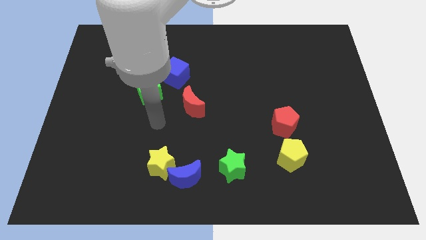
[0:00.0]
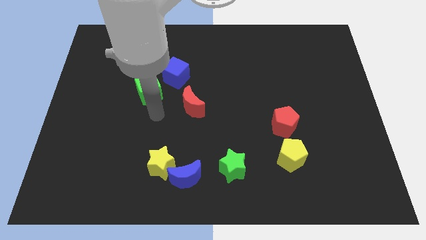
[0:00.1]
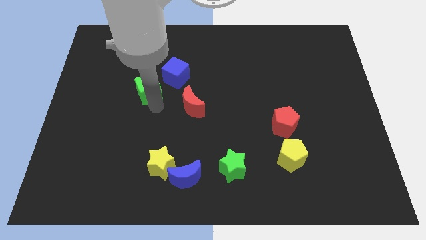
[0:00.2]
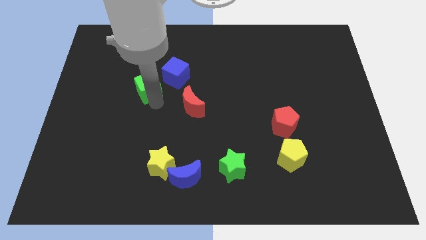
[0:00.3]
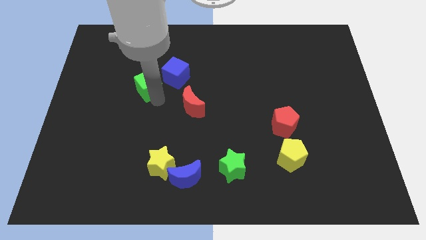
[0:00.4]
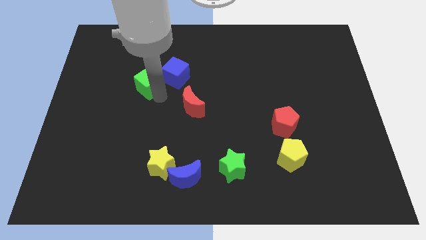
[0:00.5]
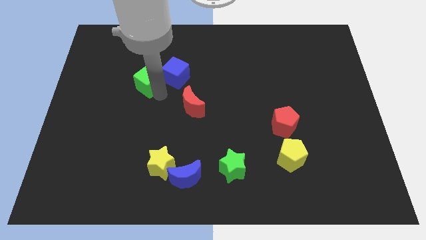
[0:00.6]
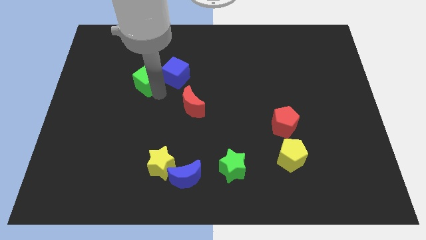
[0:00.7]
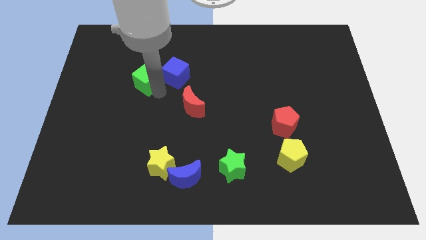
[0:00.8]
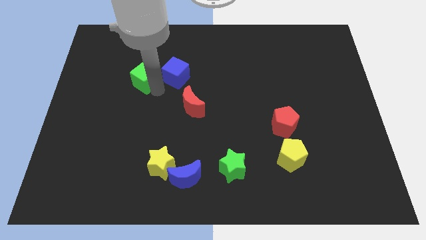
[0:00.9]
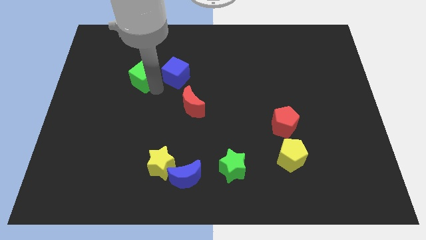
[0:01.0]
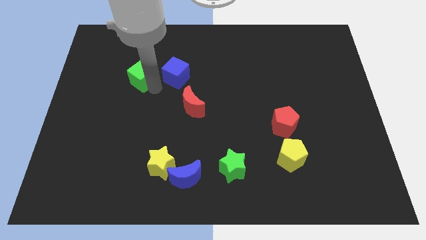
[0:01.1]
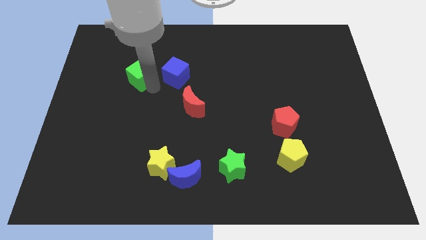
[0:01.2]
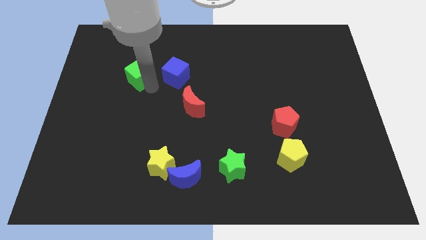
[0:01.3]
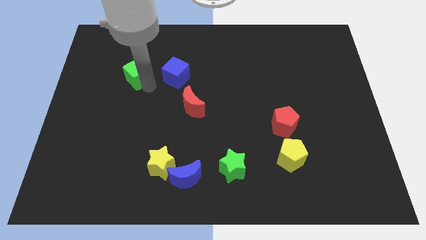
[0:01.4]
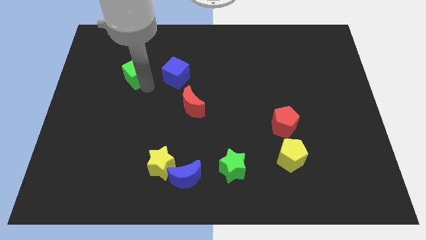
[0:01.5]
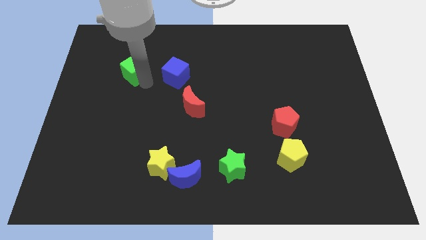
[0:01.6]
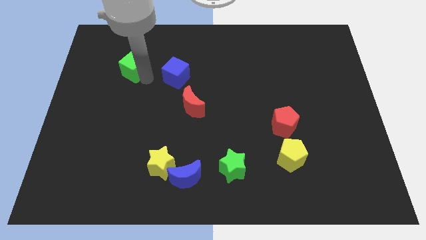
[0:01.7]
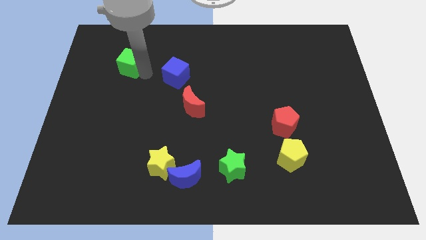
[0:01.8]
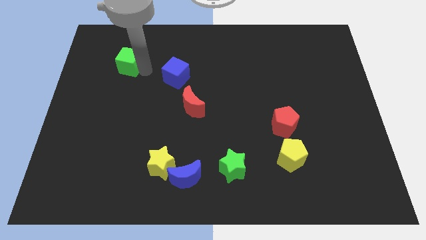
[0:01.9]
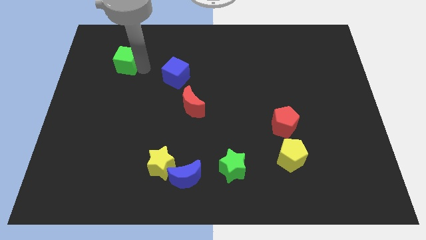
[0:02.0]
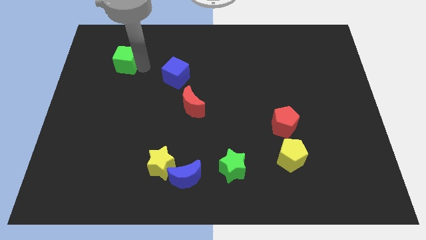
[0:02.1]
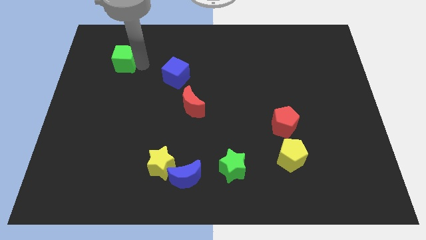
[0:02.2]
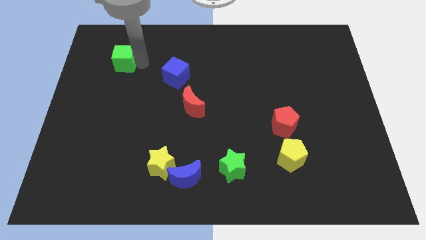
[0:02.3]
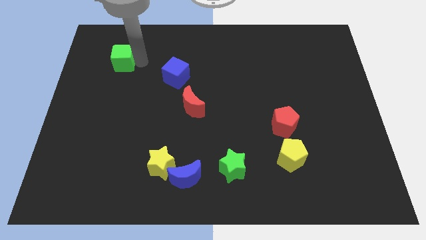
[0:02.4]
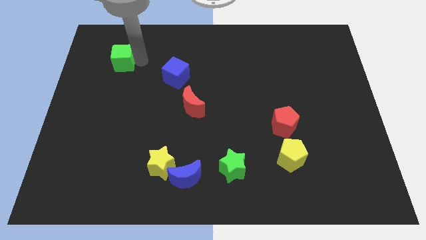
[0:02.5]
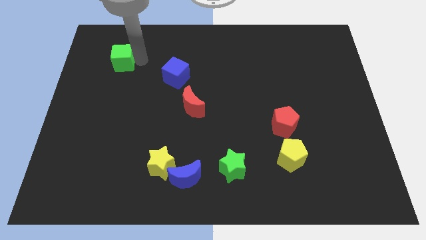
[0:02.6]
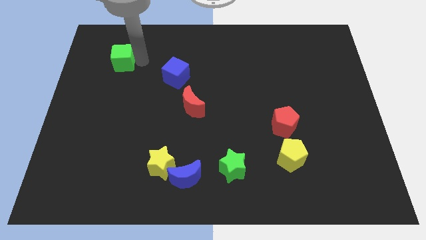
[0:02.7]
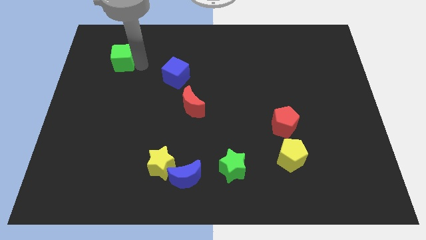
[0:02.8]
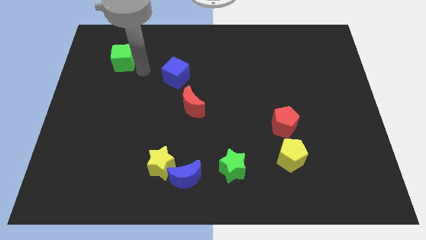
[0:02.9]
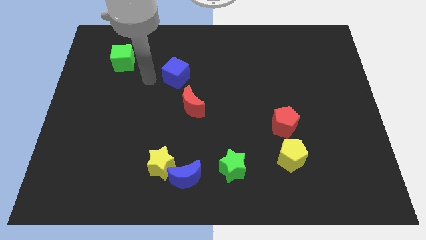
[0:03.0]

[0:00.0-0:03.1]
push green cube towards top left

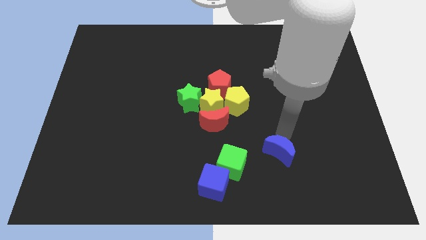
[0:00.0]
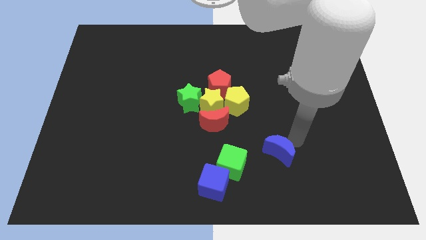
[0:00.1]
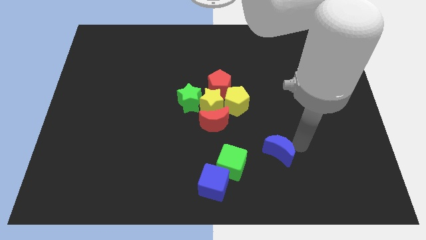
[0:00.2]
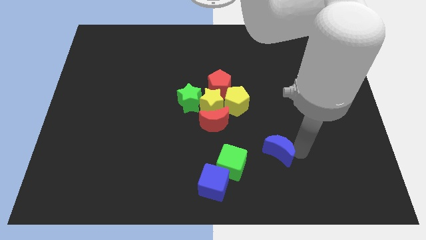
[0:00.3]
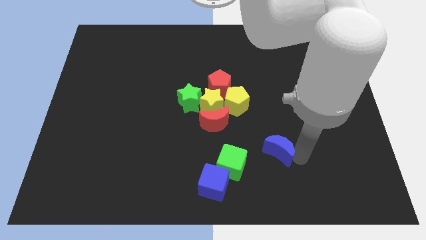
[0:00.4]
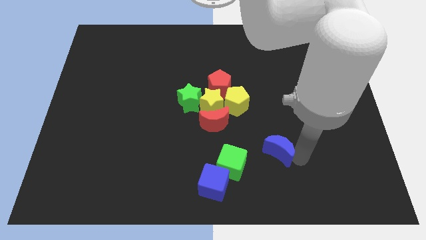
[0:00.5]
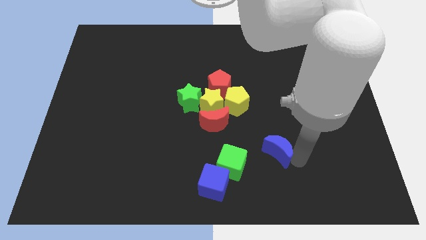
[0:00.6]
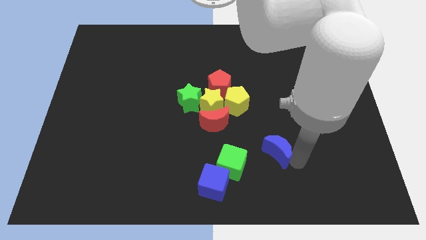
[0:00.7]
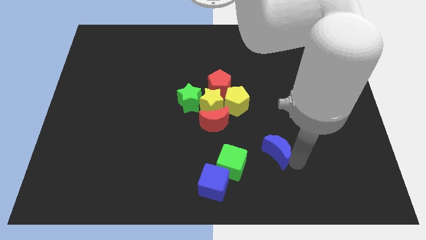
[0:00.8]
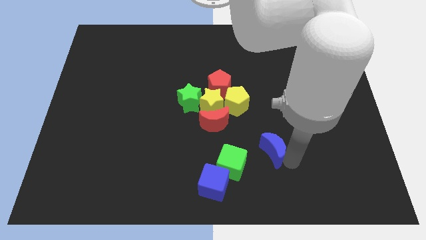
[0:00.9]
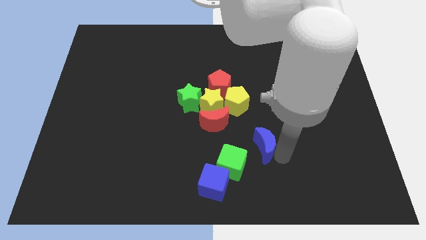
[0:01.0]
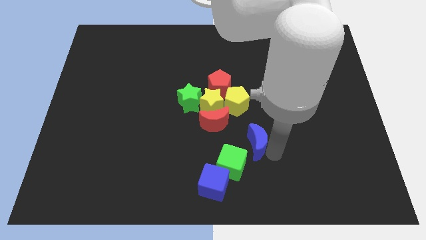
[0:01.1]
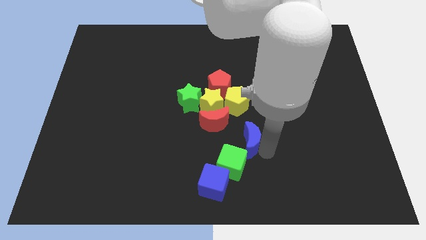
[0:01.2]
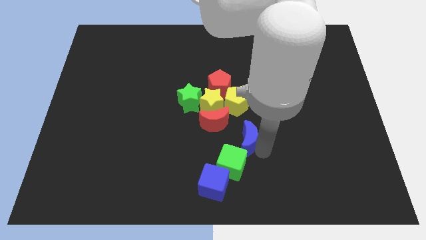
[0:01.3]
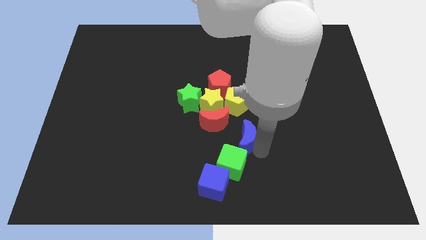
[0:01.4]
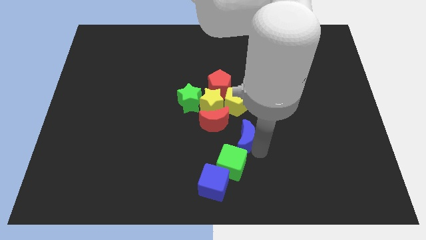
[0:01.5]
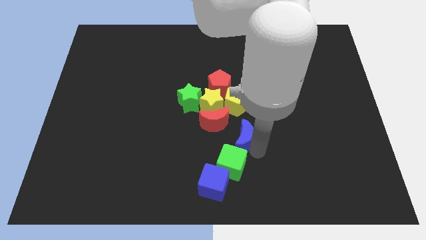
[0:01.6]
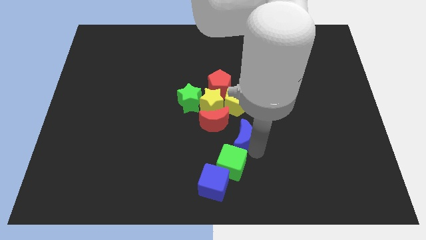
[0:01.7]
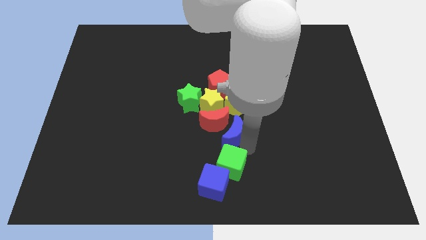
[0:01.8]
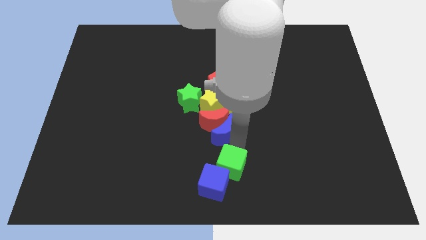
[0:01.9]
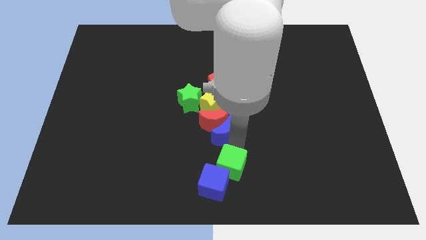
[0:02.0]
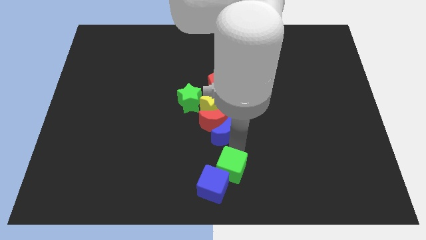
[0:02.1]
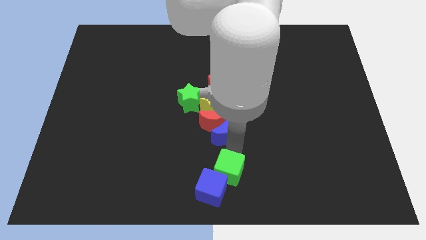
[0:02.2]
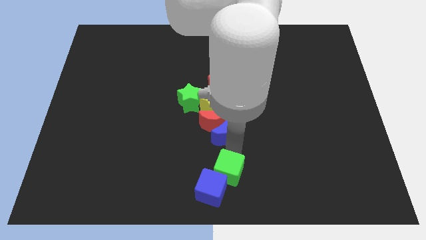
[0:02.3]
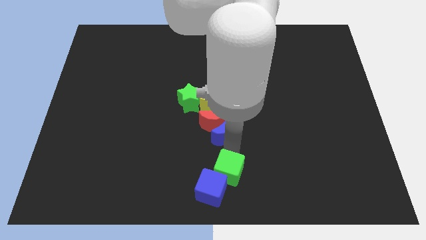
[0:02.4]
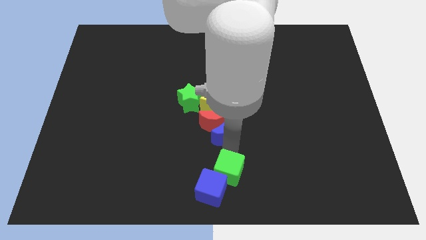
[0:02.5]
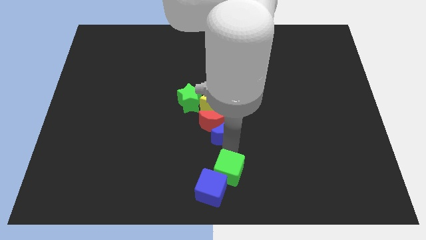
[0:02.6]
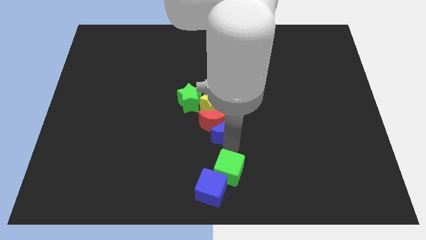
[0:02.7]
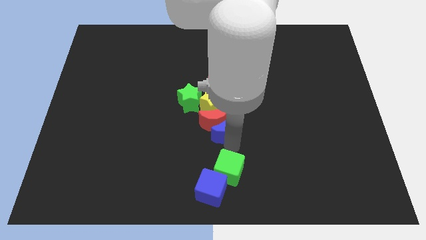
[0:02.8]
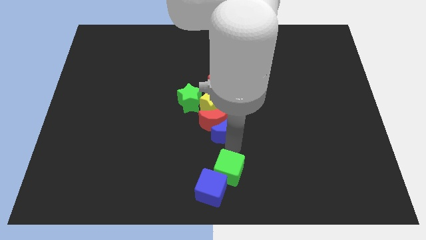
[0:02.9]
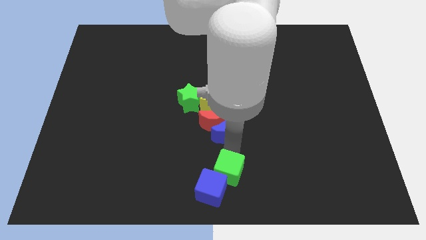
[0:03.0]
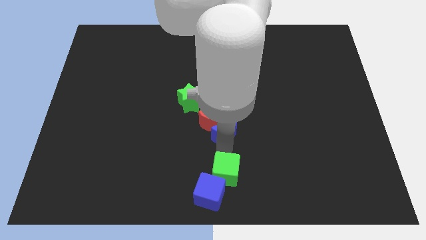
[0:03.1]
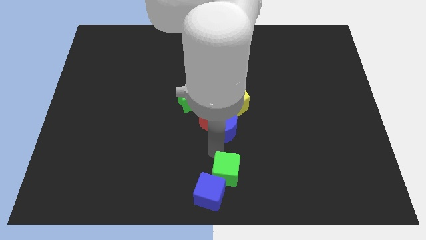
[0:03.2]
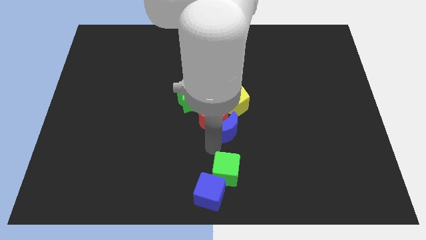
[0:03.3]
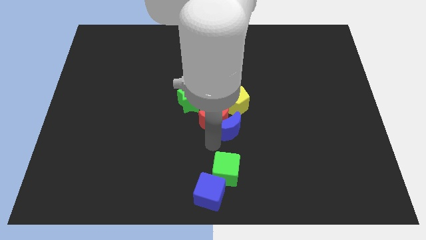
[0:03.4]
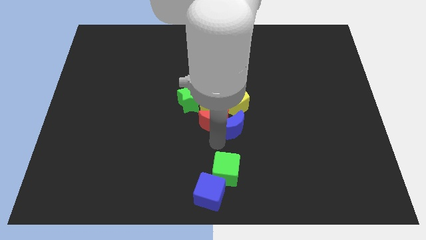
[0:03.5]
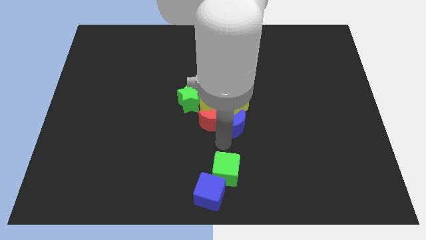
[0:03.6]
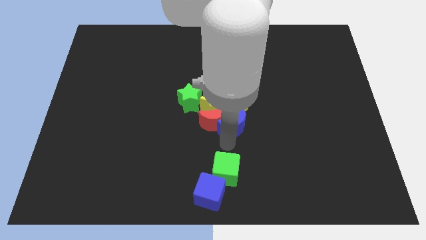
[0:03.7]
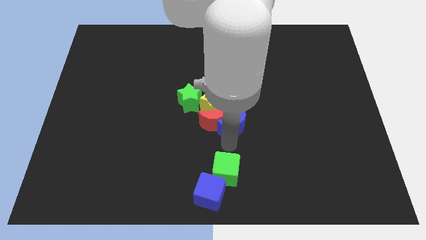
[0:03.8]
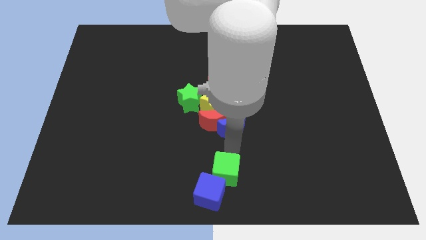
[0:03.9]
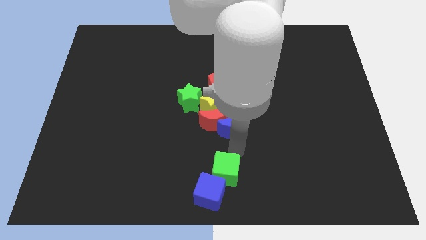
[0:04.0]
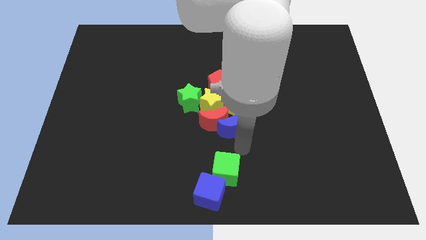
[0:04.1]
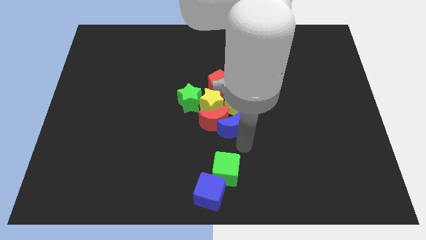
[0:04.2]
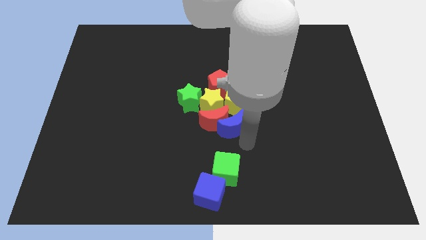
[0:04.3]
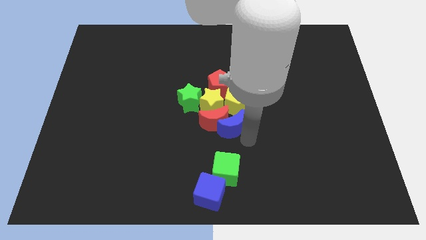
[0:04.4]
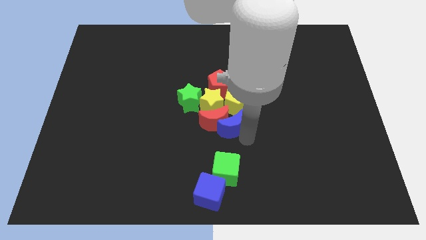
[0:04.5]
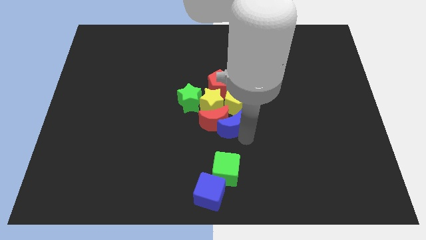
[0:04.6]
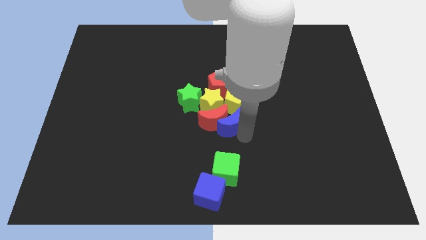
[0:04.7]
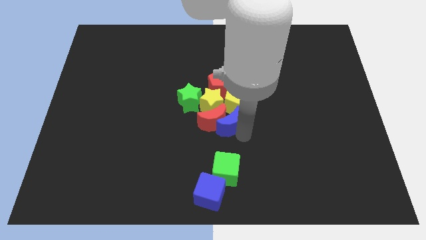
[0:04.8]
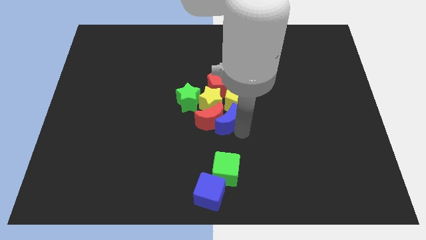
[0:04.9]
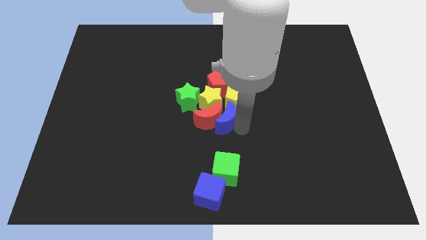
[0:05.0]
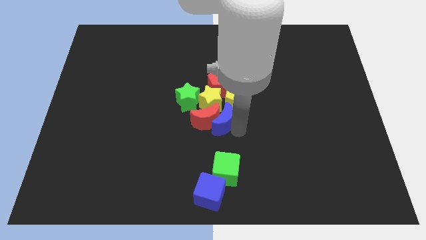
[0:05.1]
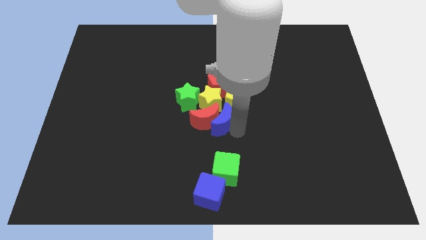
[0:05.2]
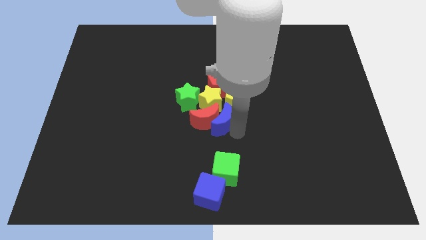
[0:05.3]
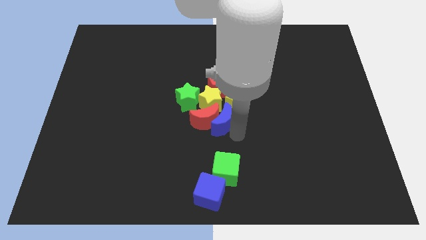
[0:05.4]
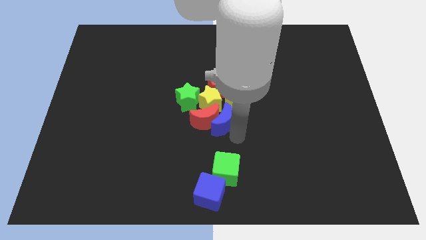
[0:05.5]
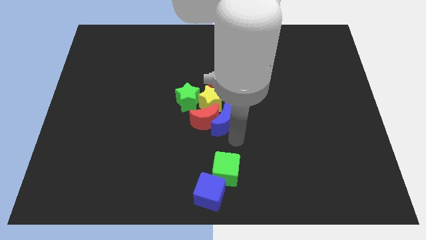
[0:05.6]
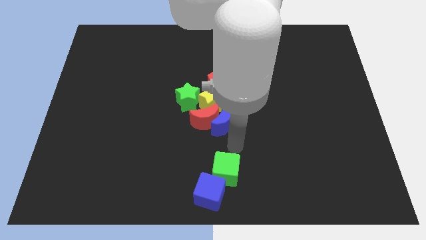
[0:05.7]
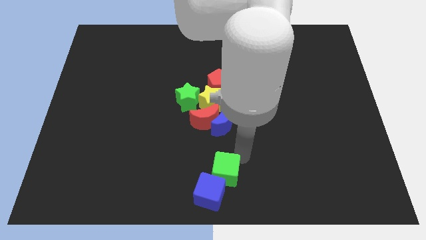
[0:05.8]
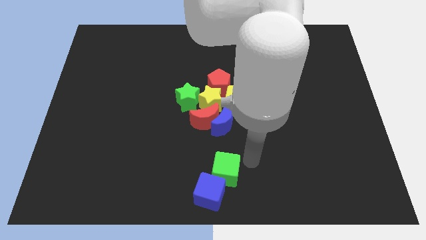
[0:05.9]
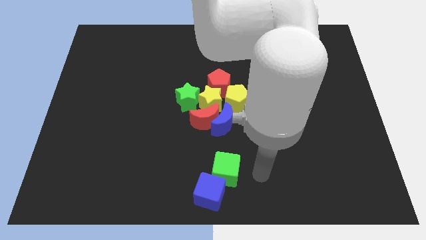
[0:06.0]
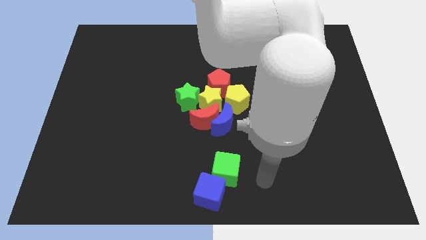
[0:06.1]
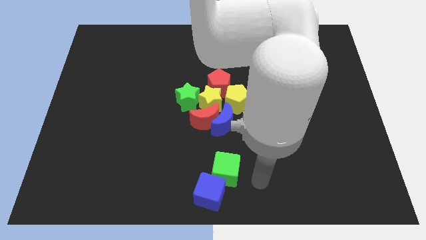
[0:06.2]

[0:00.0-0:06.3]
push the blue moon to the bottom side of the red moon
